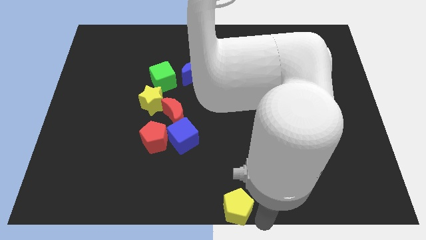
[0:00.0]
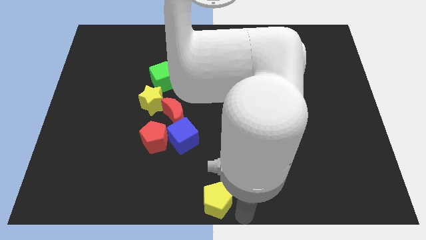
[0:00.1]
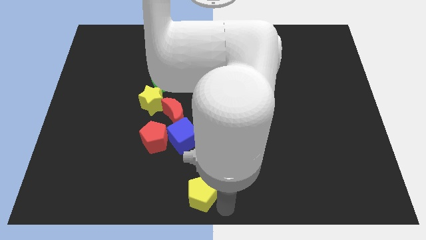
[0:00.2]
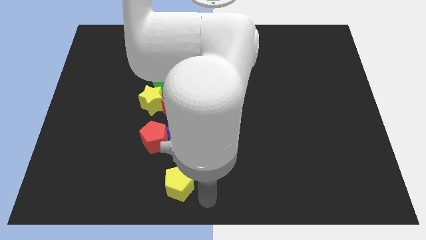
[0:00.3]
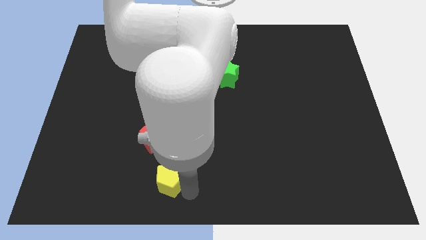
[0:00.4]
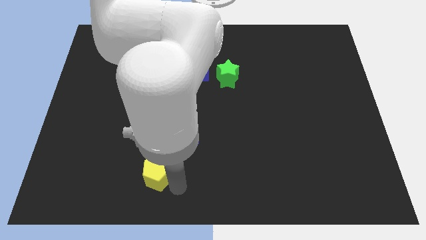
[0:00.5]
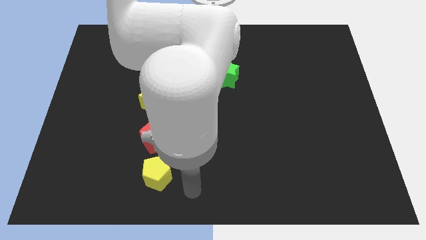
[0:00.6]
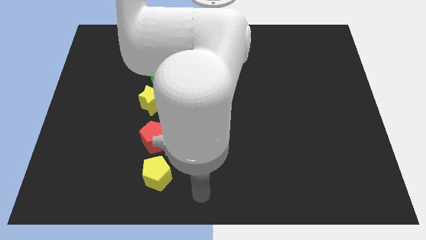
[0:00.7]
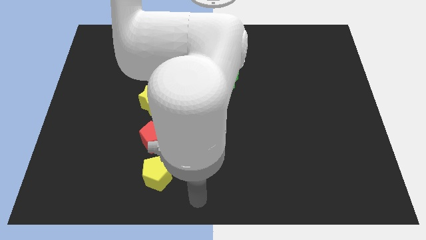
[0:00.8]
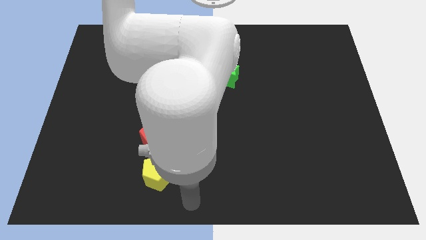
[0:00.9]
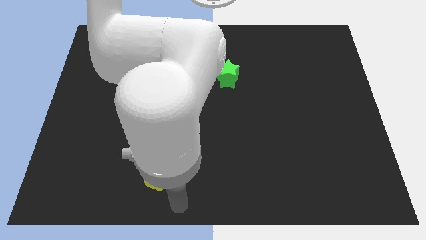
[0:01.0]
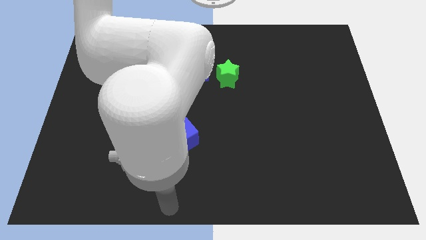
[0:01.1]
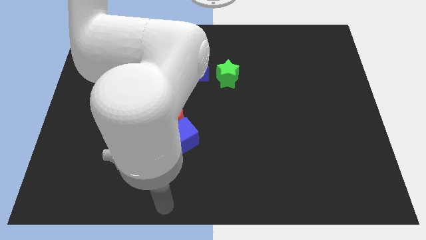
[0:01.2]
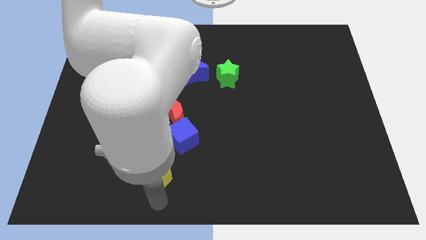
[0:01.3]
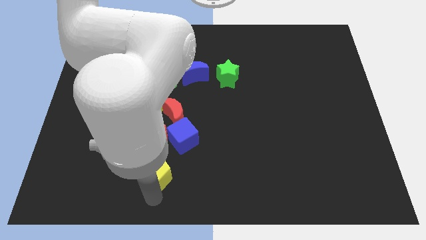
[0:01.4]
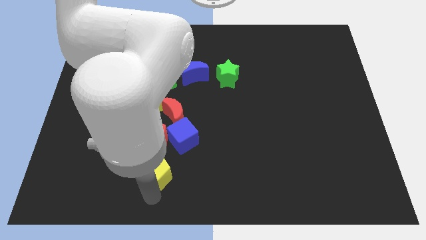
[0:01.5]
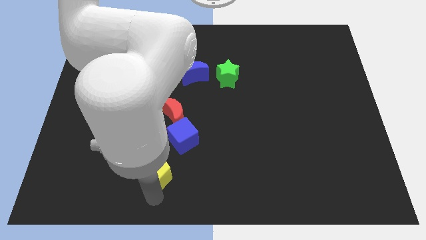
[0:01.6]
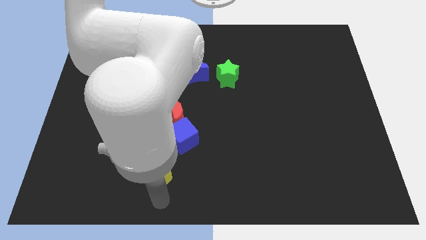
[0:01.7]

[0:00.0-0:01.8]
move the yellow pentagon below the red pentagon

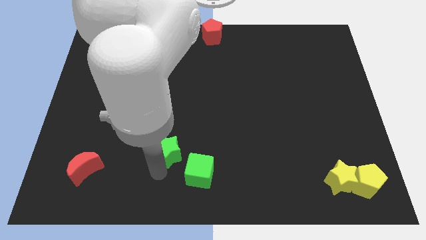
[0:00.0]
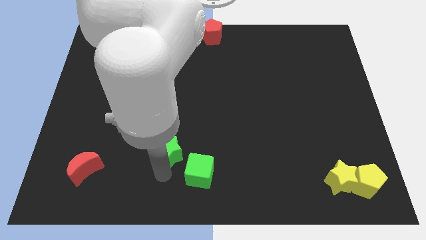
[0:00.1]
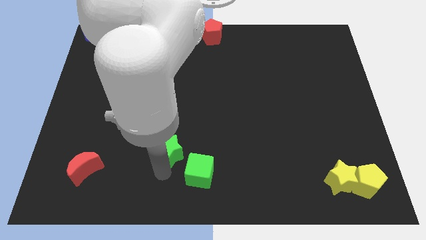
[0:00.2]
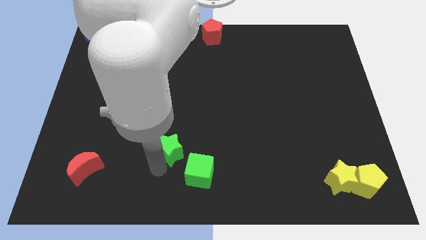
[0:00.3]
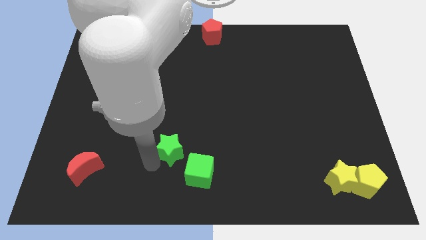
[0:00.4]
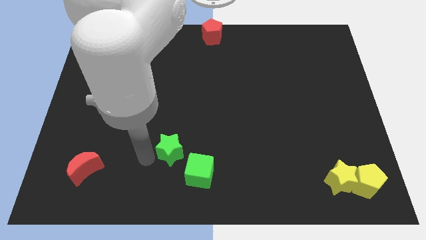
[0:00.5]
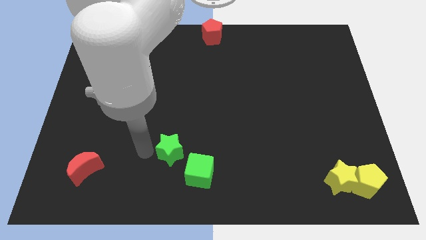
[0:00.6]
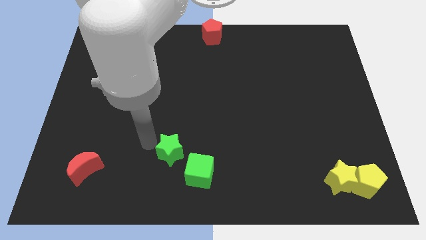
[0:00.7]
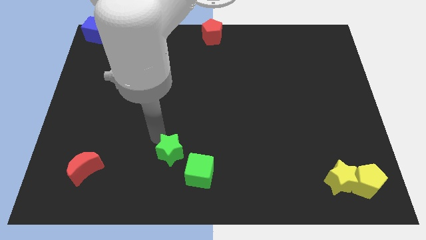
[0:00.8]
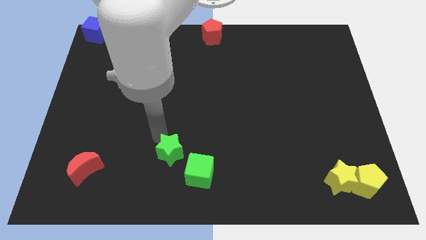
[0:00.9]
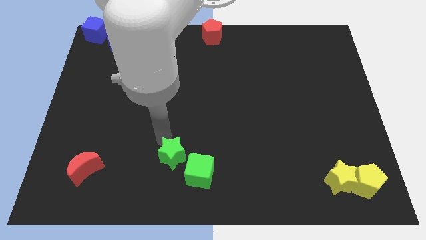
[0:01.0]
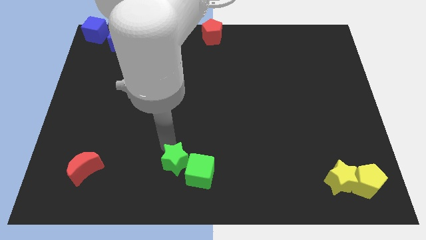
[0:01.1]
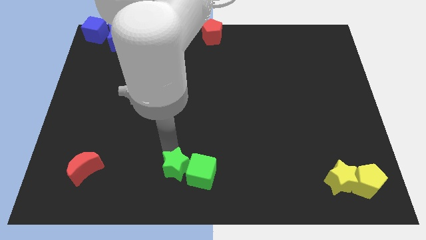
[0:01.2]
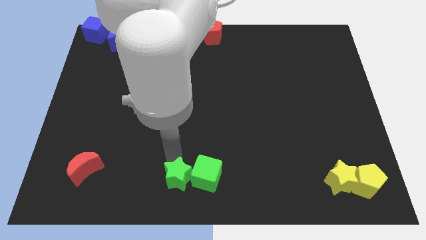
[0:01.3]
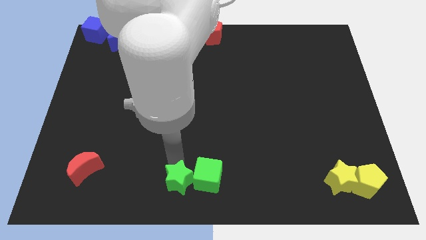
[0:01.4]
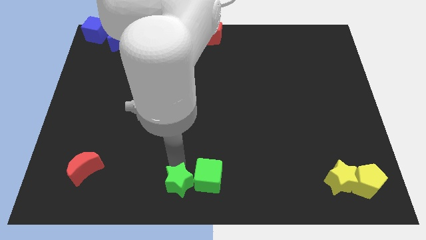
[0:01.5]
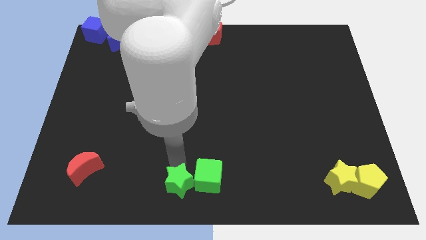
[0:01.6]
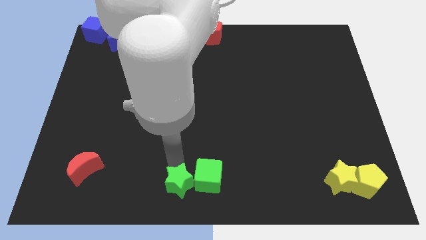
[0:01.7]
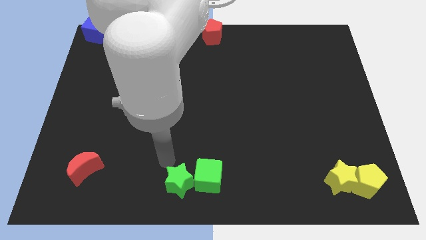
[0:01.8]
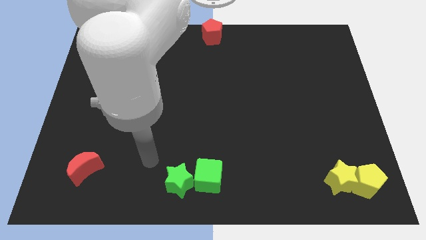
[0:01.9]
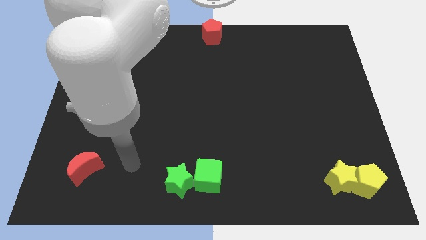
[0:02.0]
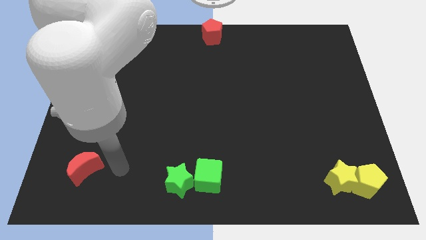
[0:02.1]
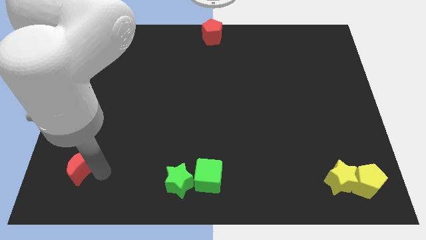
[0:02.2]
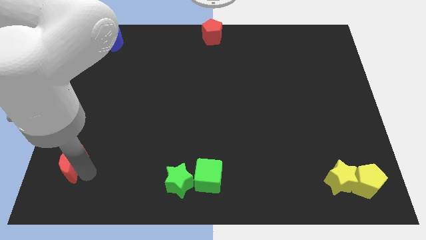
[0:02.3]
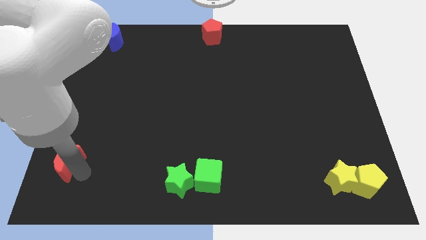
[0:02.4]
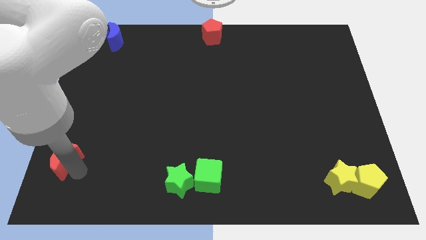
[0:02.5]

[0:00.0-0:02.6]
move the green blocks to the bottom middle of the board

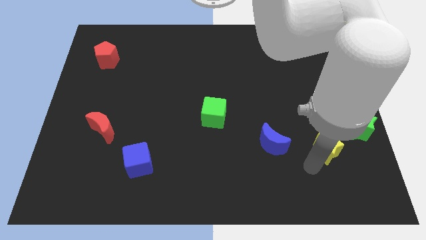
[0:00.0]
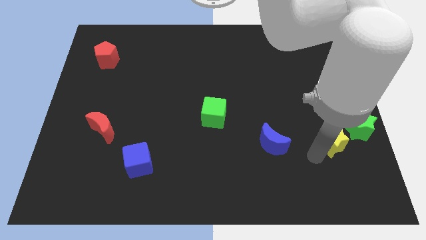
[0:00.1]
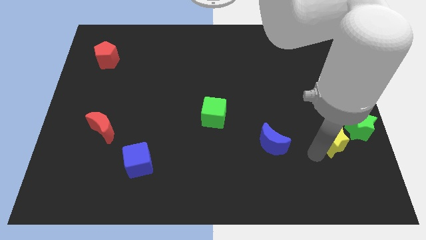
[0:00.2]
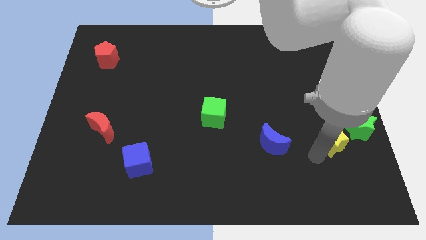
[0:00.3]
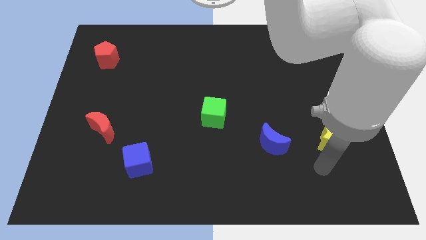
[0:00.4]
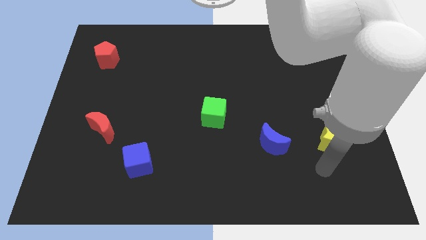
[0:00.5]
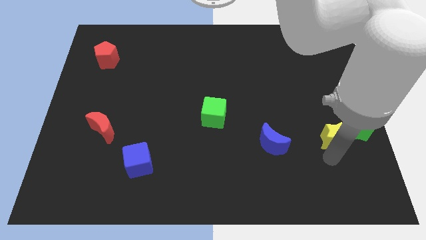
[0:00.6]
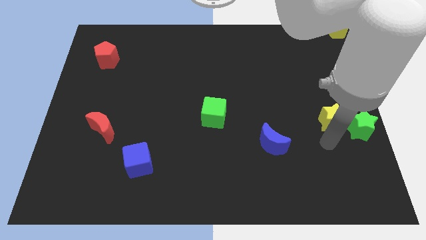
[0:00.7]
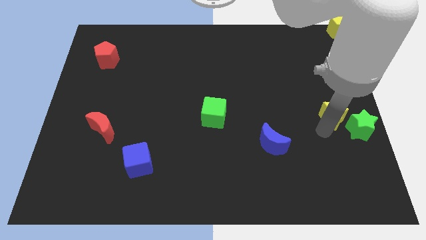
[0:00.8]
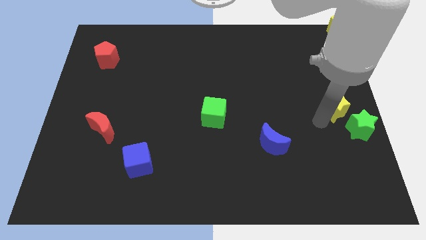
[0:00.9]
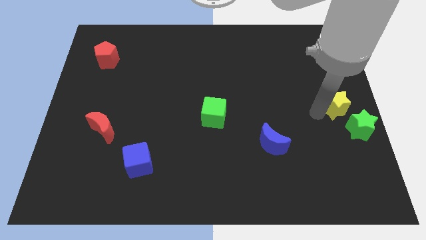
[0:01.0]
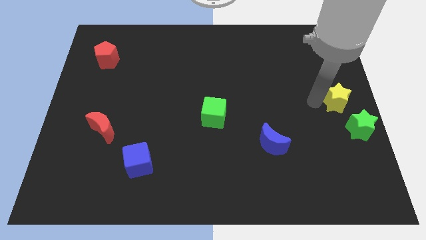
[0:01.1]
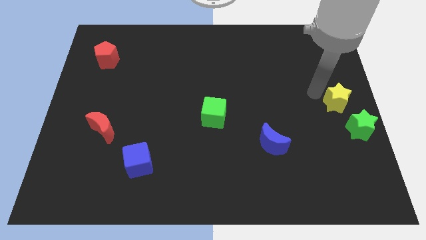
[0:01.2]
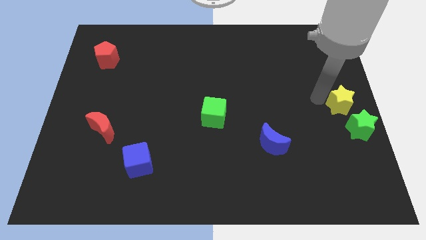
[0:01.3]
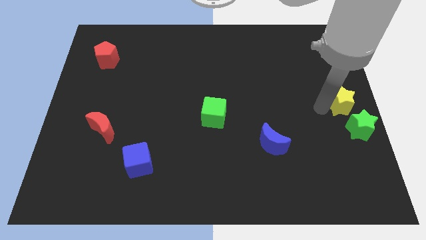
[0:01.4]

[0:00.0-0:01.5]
place the yellow star on top of green star

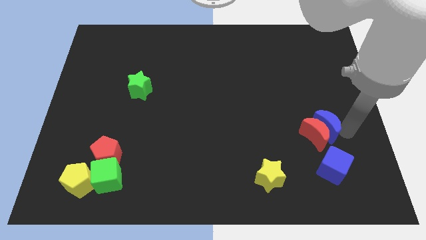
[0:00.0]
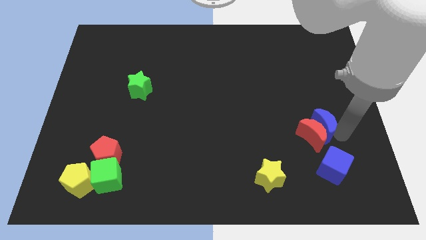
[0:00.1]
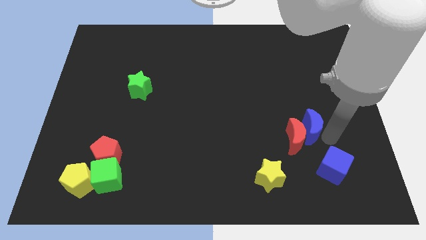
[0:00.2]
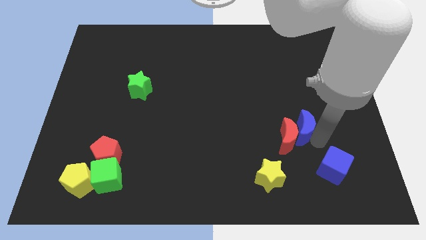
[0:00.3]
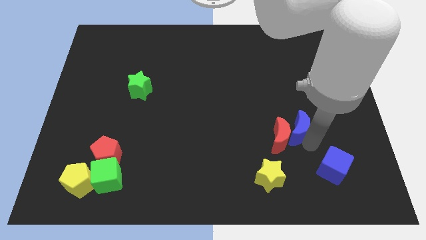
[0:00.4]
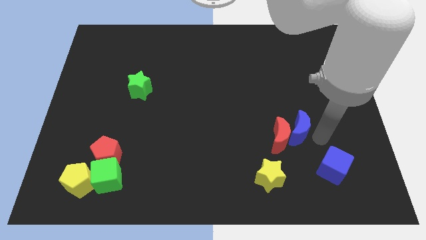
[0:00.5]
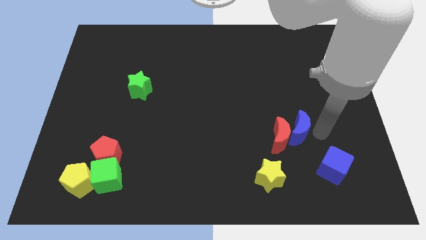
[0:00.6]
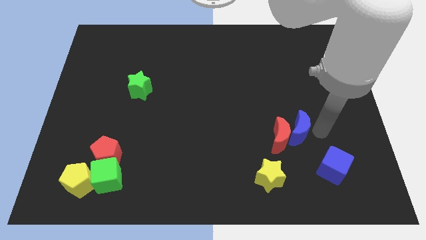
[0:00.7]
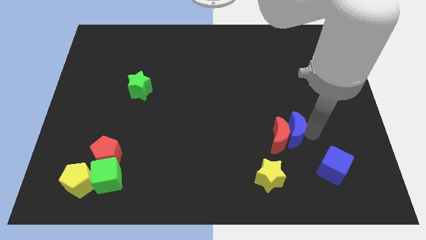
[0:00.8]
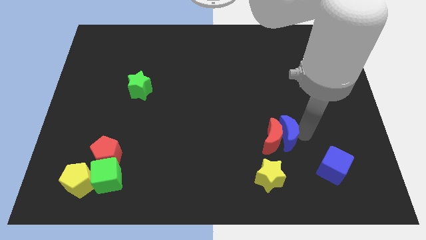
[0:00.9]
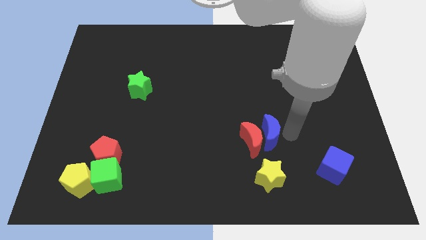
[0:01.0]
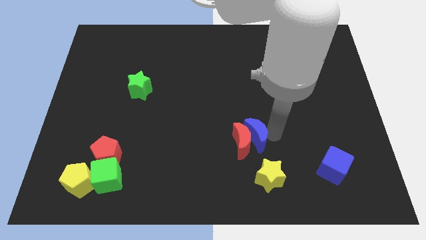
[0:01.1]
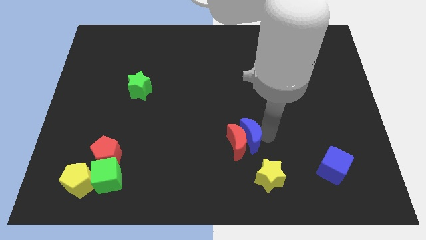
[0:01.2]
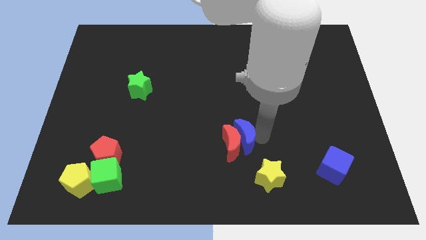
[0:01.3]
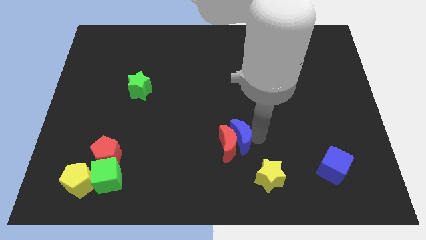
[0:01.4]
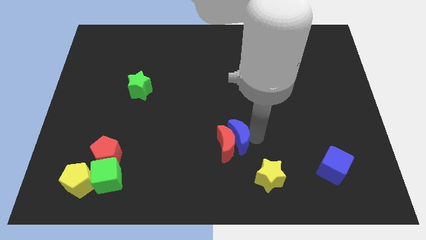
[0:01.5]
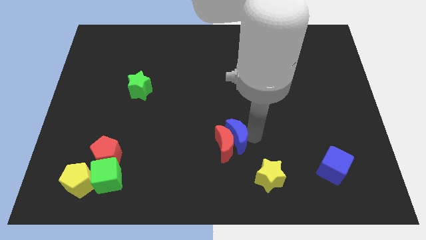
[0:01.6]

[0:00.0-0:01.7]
push the red crescent using the blue crescent

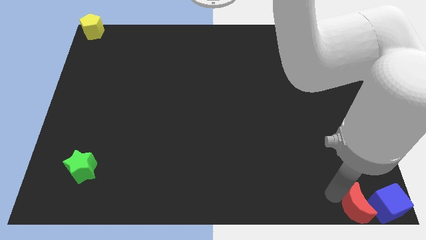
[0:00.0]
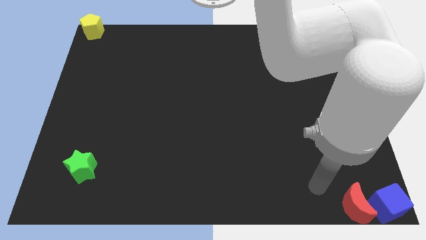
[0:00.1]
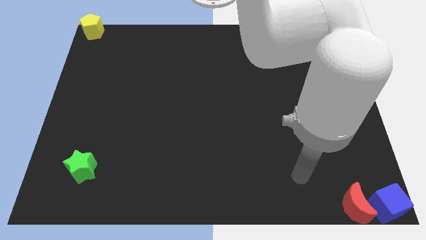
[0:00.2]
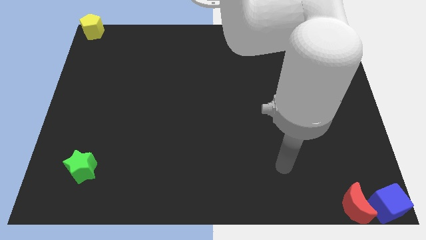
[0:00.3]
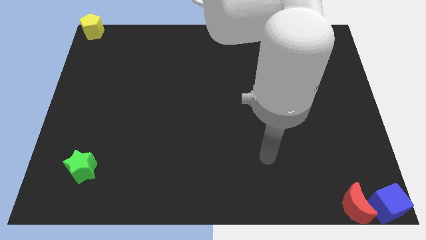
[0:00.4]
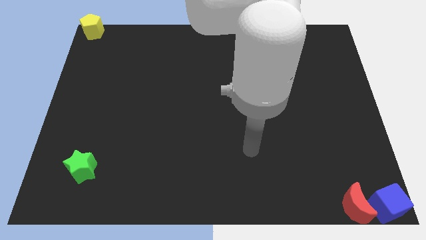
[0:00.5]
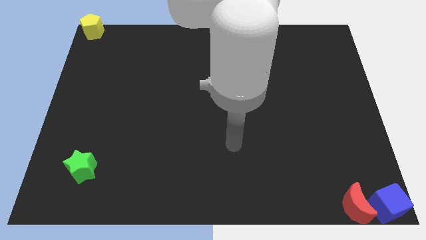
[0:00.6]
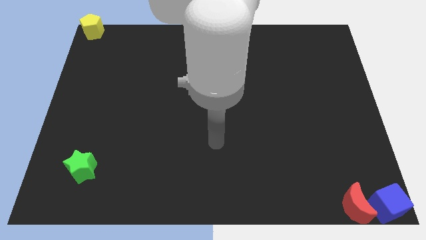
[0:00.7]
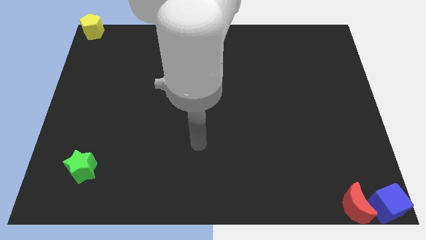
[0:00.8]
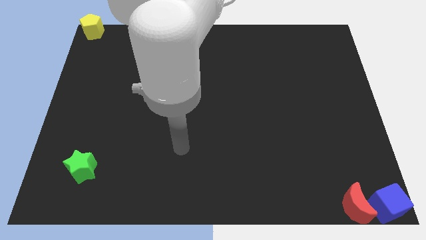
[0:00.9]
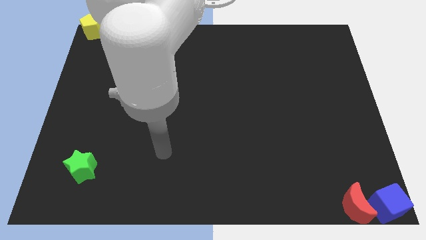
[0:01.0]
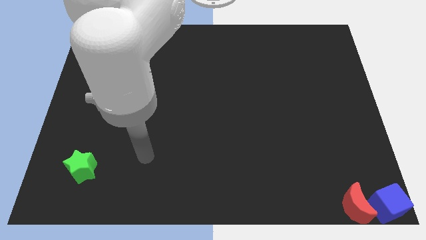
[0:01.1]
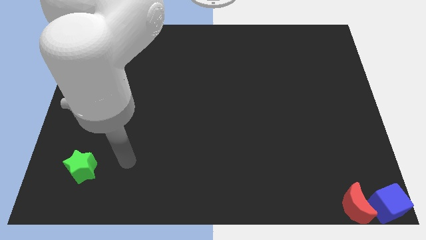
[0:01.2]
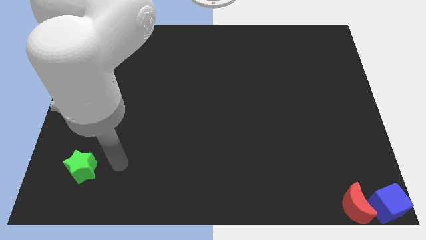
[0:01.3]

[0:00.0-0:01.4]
point your arm at the right side of the green star
